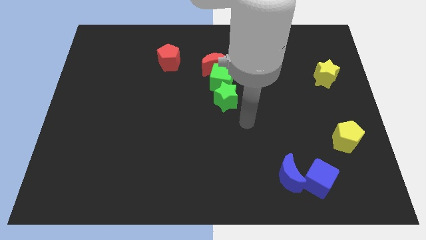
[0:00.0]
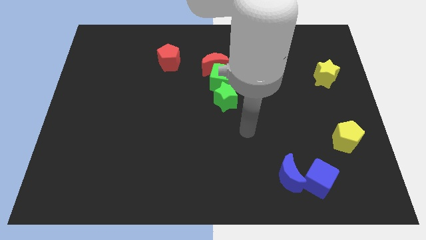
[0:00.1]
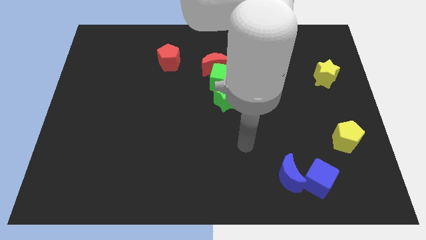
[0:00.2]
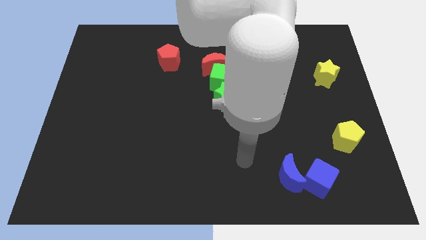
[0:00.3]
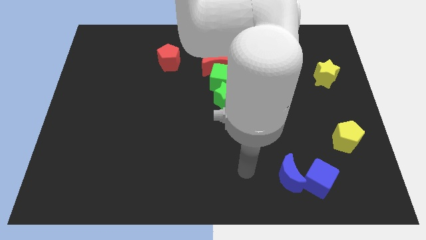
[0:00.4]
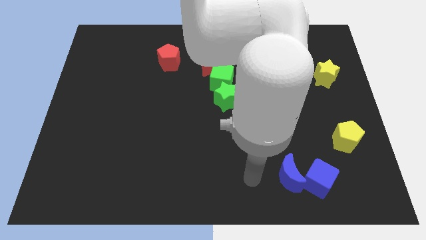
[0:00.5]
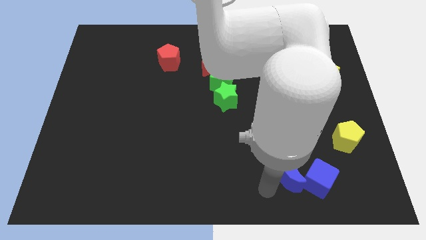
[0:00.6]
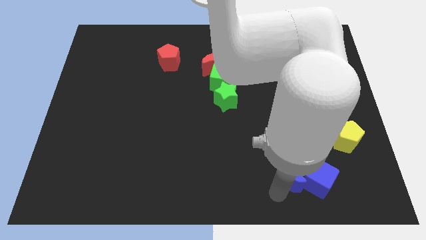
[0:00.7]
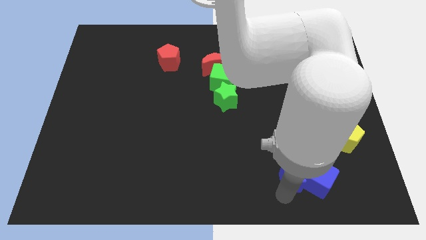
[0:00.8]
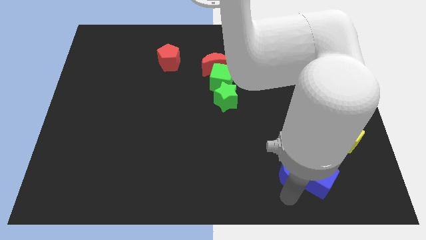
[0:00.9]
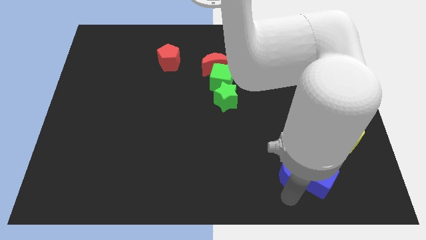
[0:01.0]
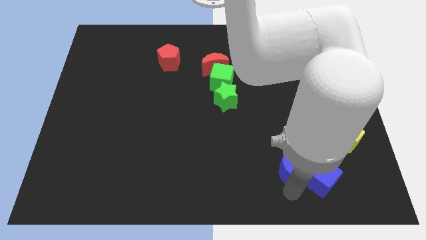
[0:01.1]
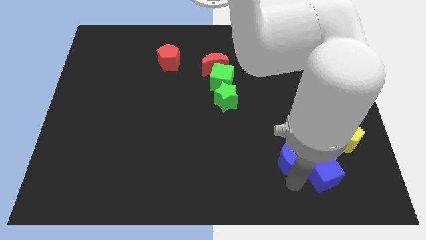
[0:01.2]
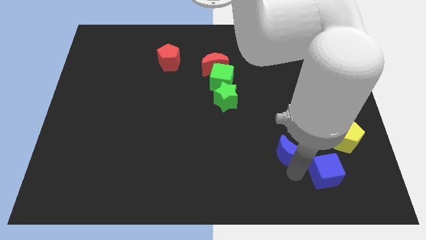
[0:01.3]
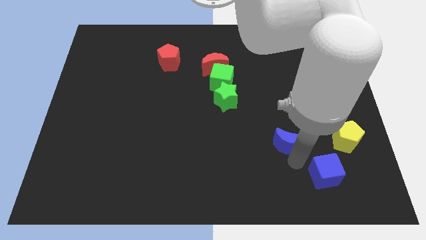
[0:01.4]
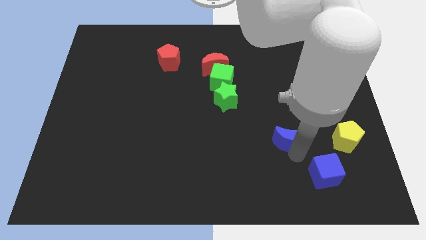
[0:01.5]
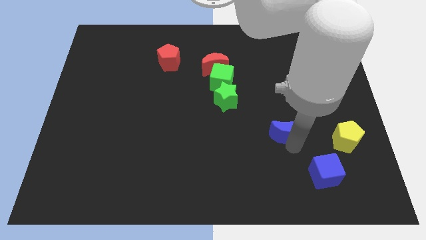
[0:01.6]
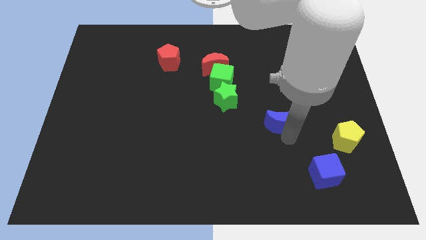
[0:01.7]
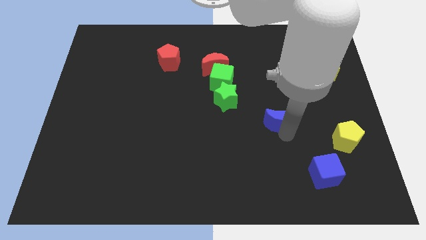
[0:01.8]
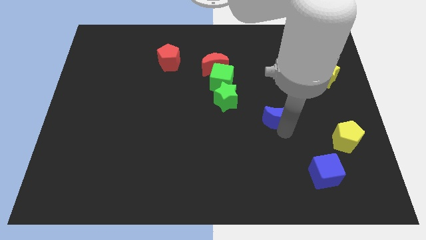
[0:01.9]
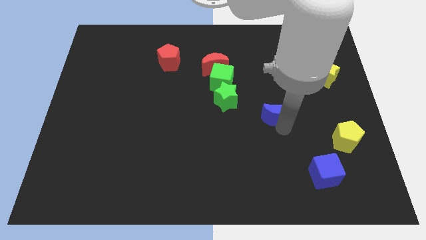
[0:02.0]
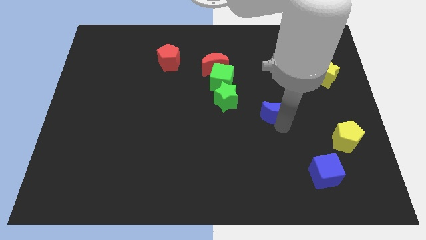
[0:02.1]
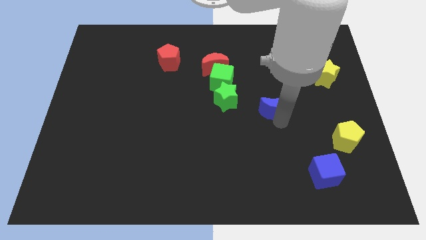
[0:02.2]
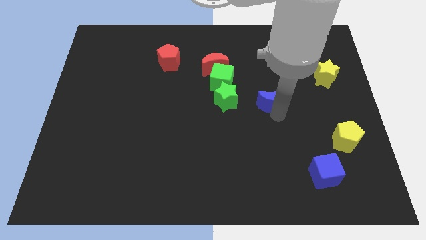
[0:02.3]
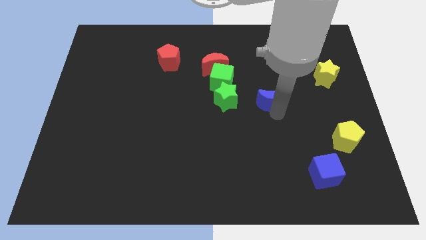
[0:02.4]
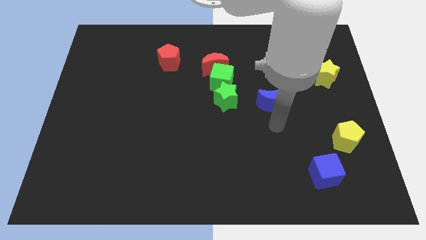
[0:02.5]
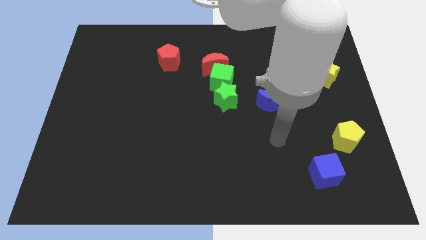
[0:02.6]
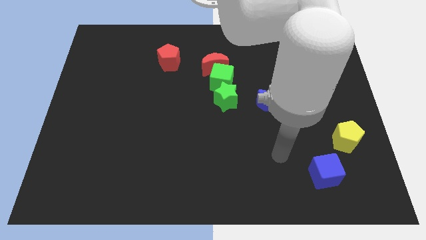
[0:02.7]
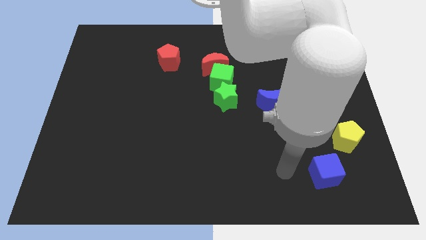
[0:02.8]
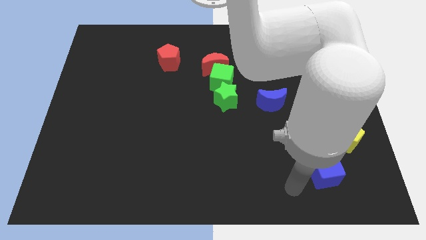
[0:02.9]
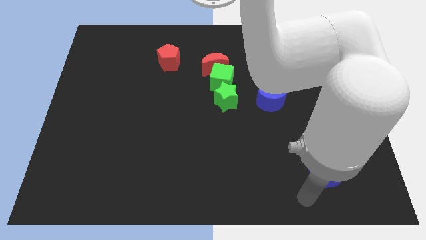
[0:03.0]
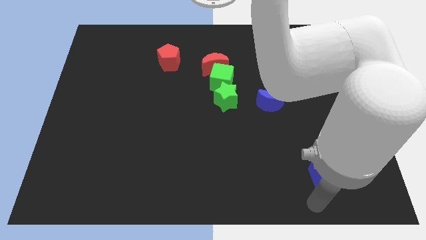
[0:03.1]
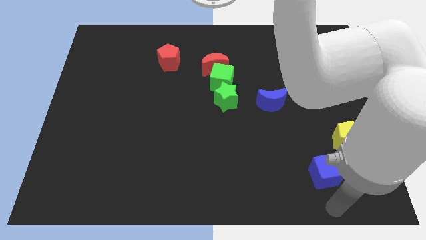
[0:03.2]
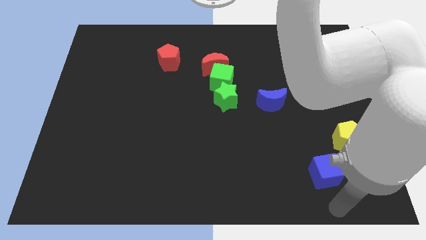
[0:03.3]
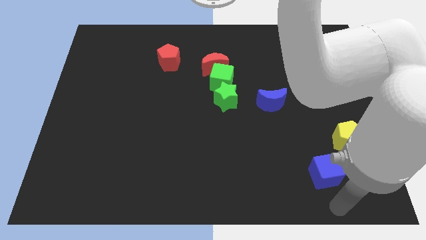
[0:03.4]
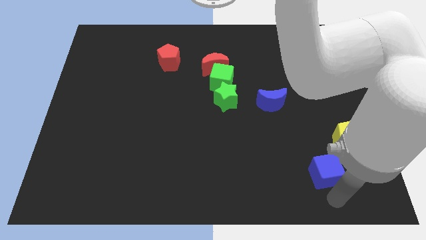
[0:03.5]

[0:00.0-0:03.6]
place the blue moon to the right of the green star

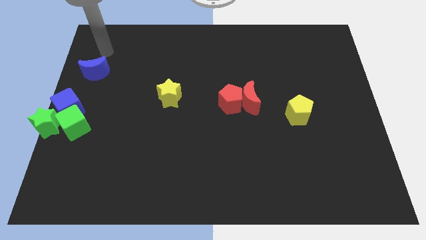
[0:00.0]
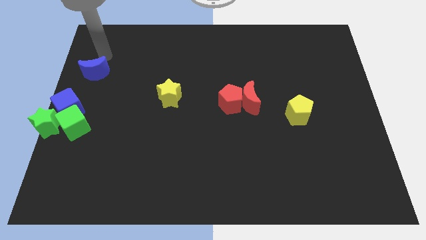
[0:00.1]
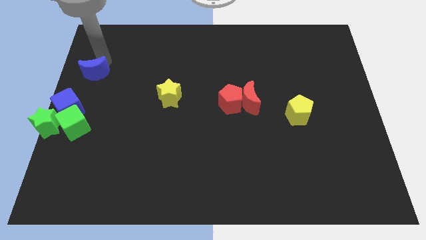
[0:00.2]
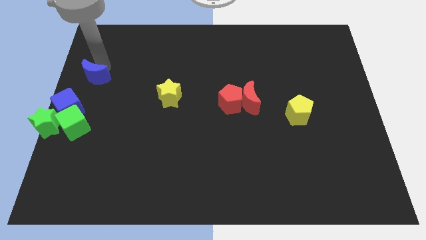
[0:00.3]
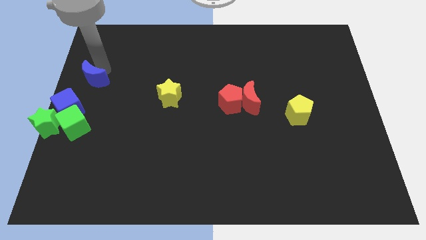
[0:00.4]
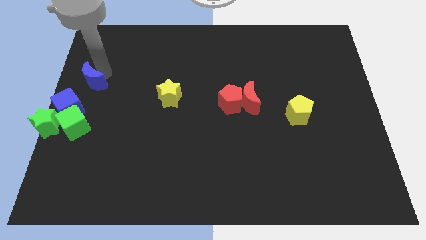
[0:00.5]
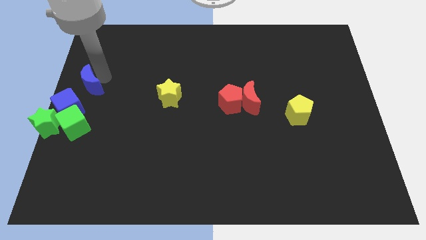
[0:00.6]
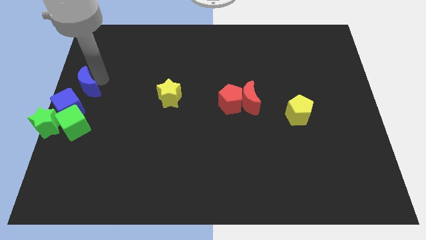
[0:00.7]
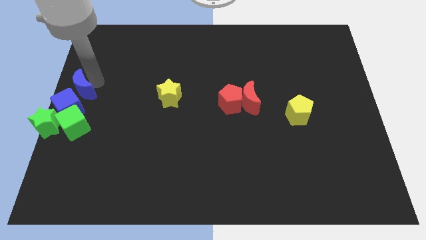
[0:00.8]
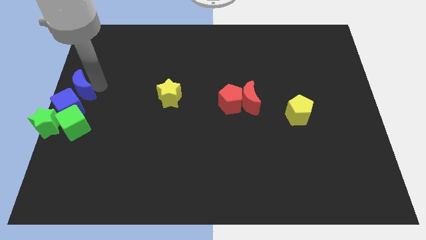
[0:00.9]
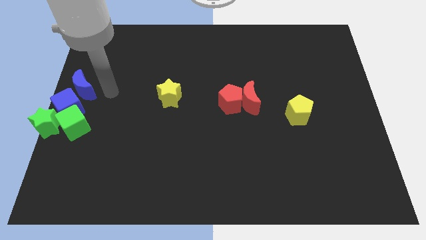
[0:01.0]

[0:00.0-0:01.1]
push blue moon towards blue cube

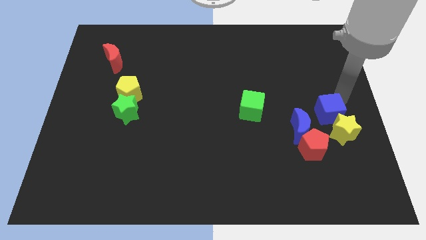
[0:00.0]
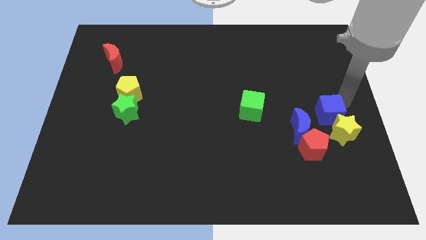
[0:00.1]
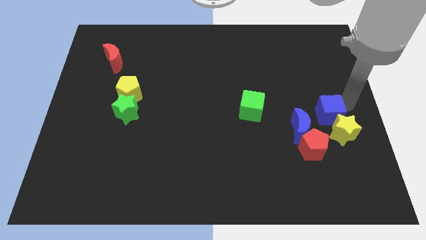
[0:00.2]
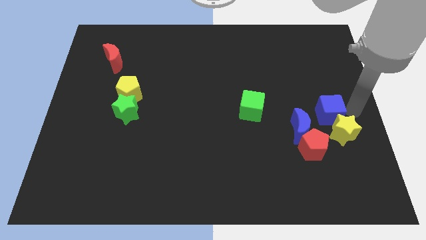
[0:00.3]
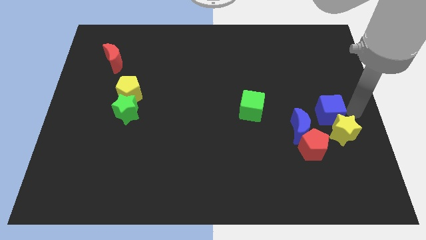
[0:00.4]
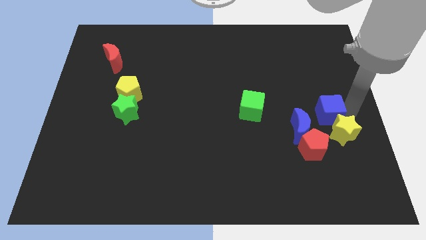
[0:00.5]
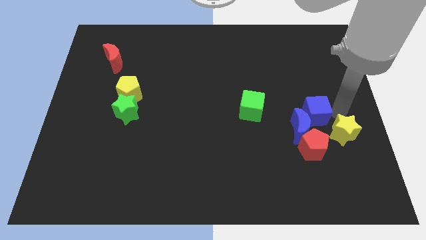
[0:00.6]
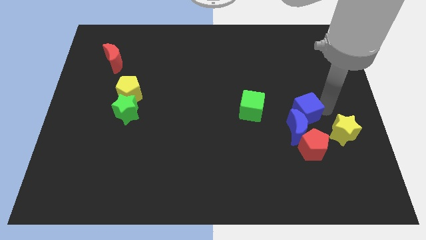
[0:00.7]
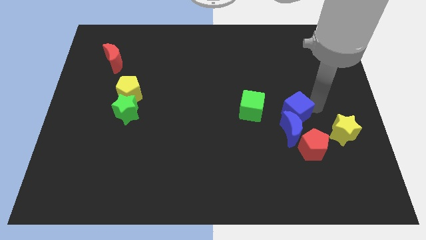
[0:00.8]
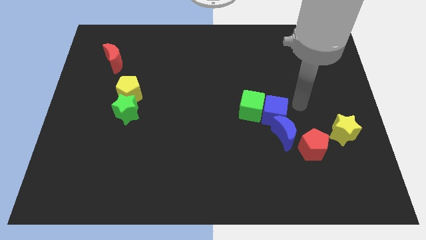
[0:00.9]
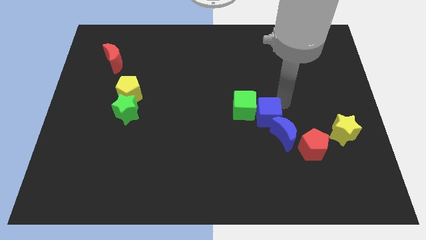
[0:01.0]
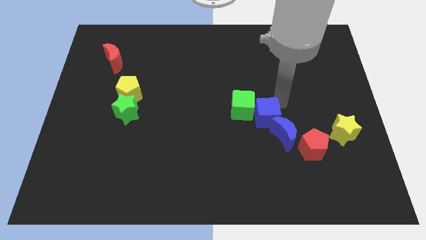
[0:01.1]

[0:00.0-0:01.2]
push blue cube in to green cube

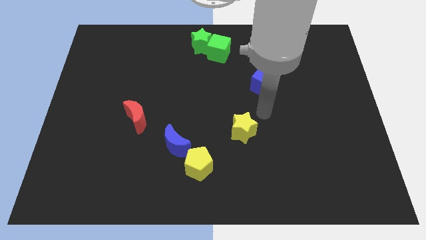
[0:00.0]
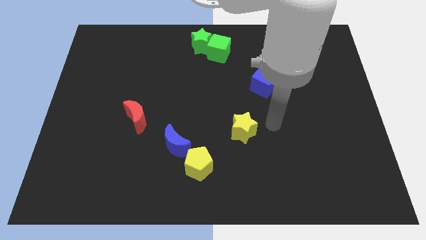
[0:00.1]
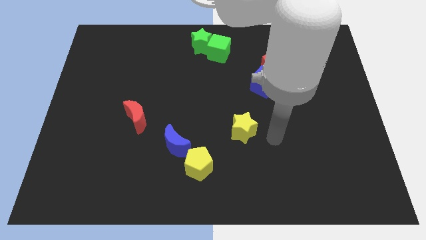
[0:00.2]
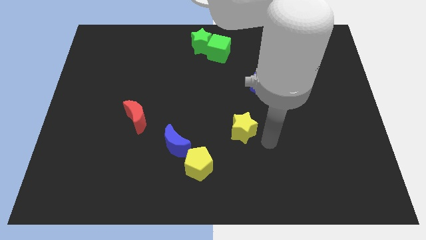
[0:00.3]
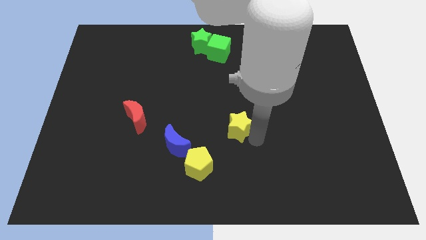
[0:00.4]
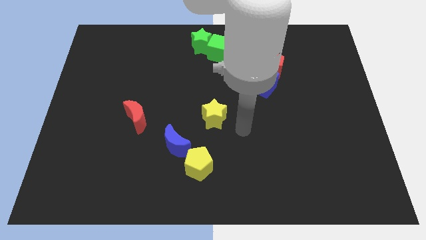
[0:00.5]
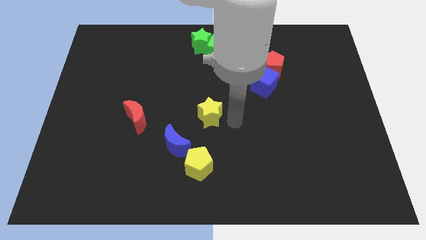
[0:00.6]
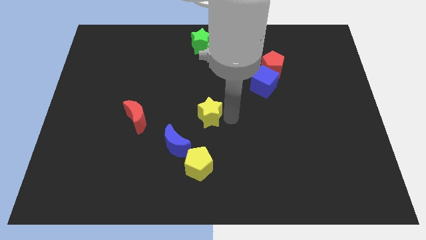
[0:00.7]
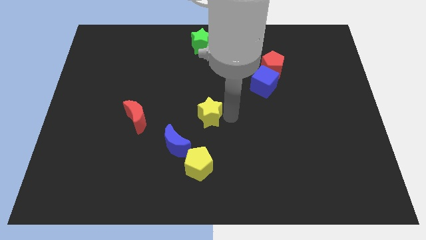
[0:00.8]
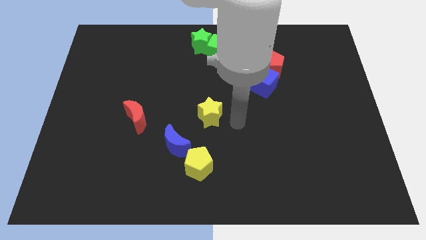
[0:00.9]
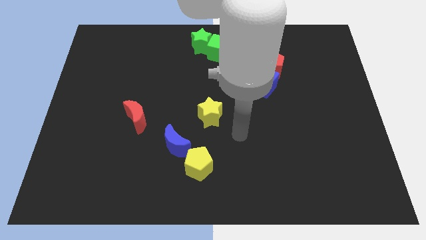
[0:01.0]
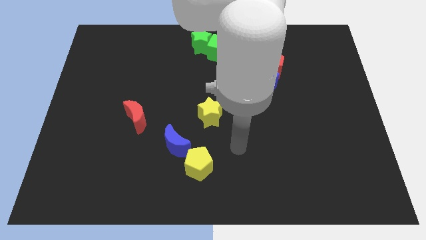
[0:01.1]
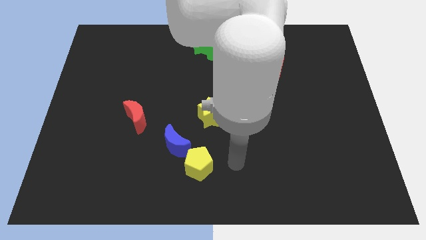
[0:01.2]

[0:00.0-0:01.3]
move the yellow star parallel to the right of the red crescent

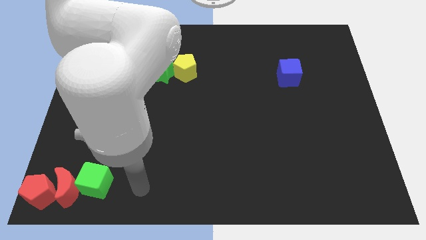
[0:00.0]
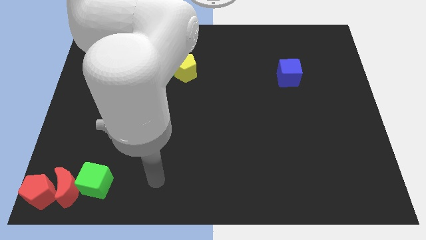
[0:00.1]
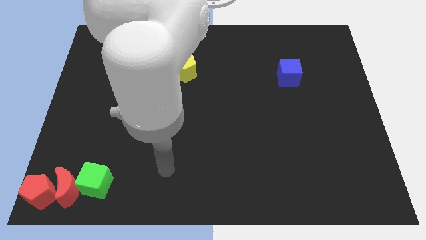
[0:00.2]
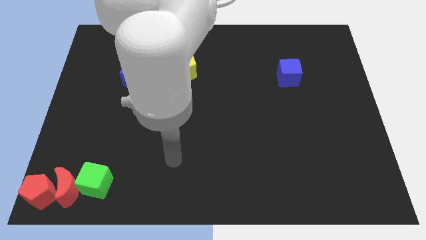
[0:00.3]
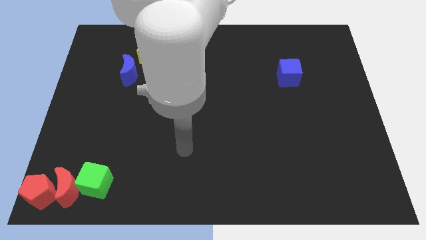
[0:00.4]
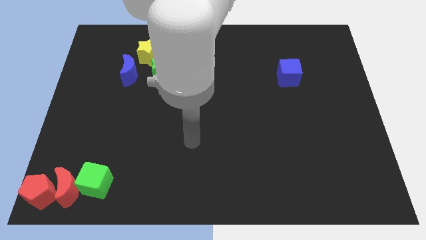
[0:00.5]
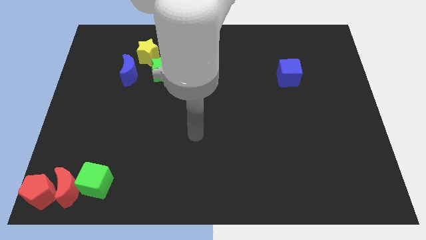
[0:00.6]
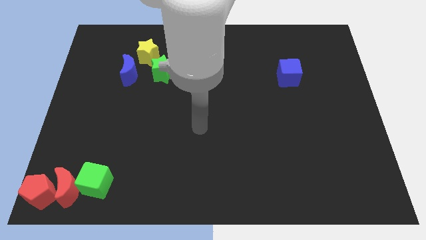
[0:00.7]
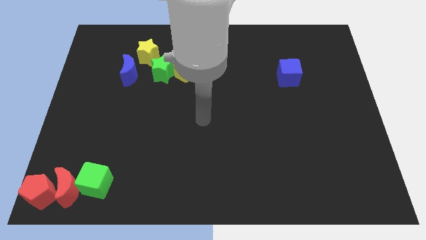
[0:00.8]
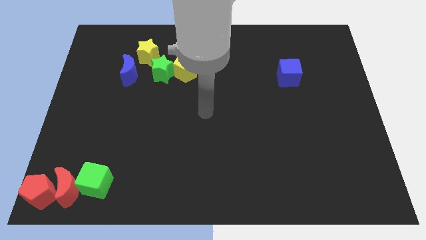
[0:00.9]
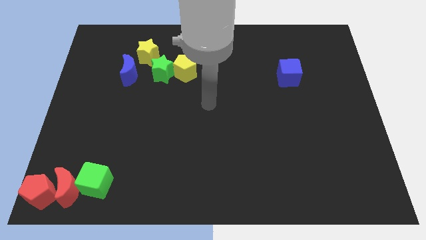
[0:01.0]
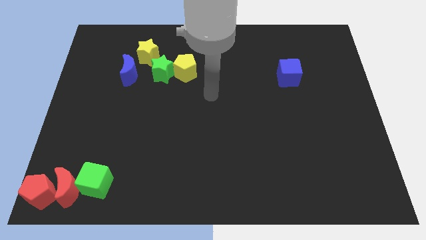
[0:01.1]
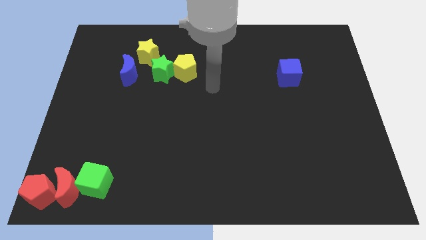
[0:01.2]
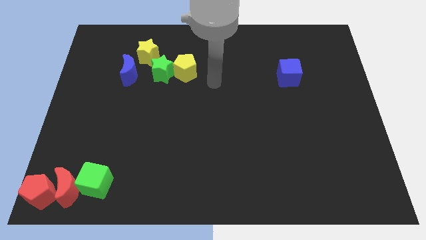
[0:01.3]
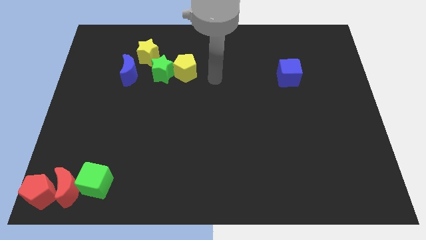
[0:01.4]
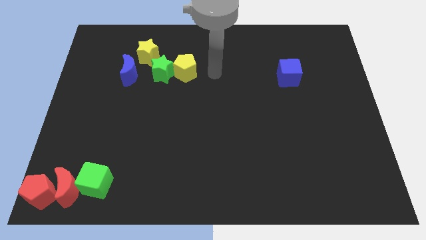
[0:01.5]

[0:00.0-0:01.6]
move yourself to the right side of the yellow pentagon

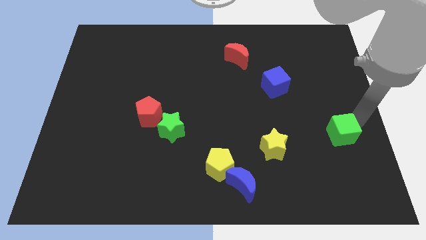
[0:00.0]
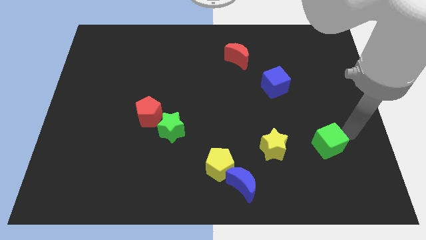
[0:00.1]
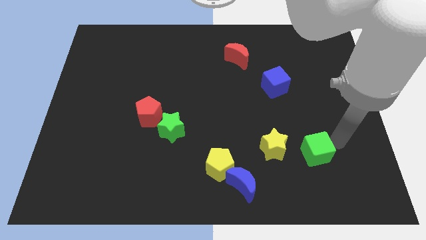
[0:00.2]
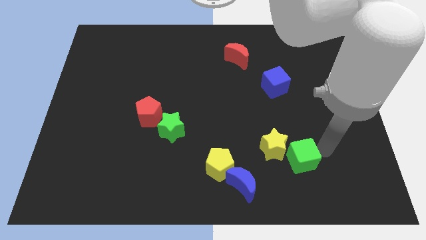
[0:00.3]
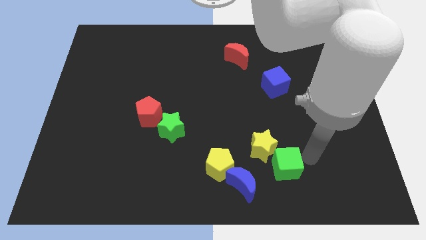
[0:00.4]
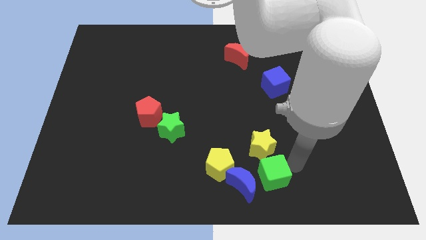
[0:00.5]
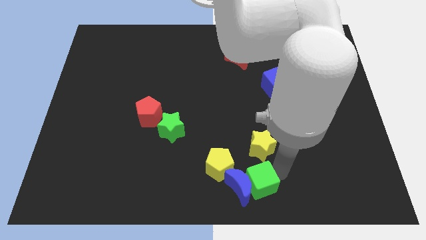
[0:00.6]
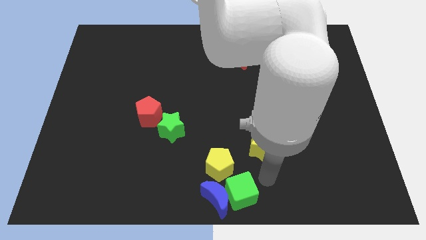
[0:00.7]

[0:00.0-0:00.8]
move the green cube into the blue crescent
